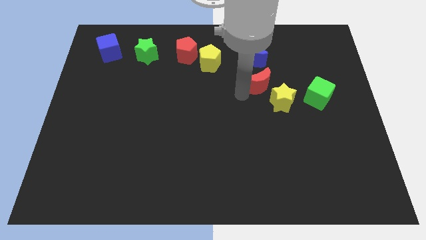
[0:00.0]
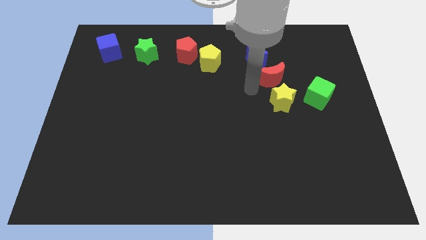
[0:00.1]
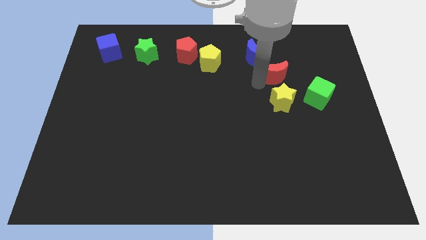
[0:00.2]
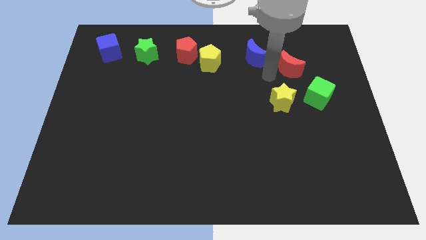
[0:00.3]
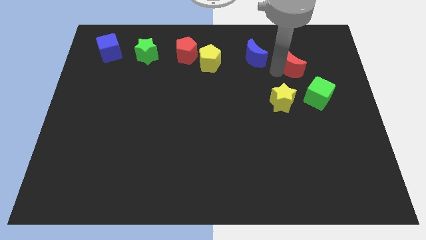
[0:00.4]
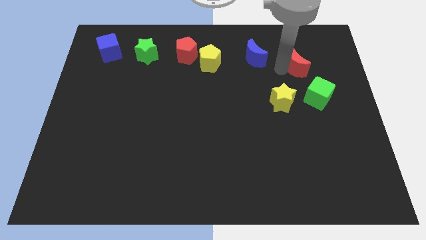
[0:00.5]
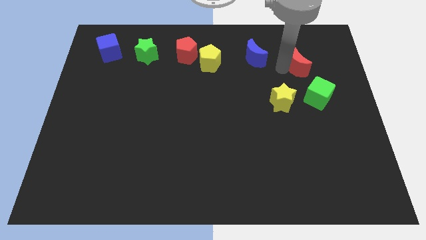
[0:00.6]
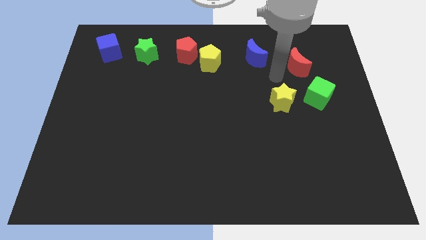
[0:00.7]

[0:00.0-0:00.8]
move the red moon right to the blue moon

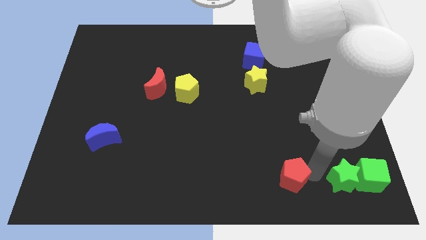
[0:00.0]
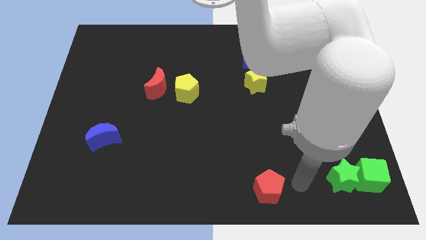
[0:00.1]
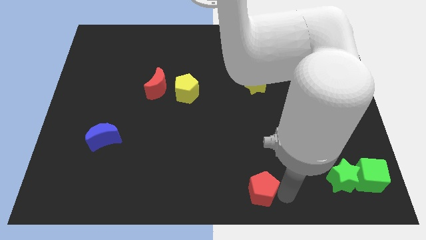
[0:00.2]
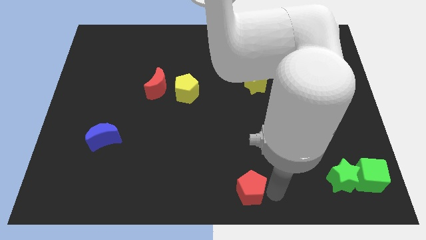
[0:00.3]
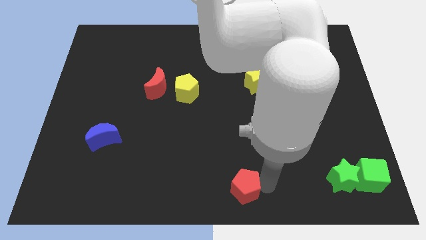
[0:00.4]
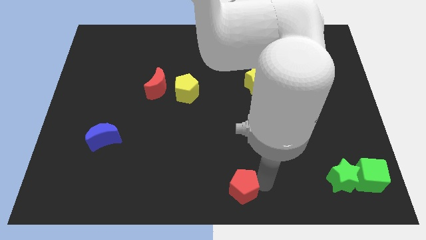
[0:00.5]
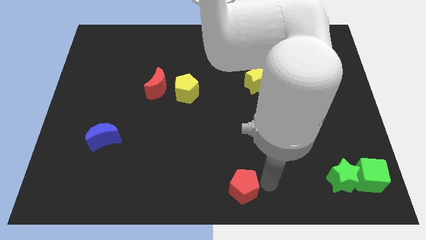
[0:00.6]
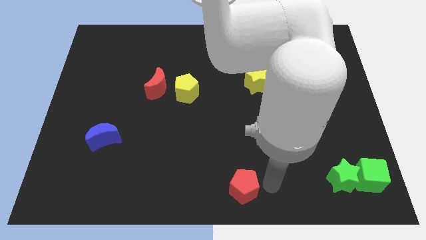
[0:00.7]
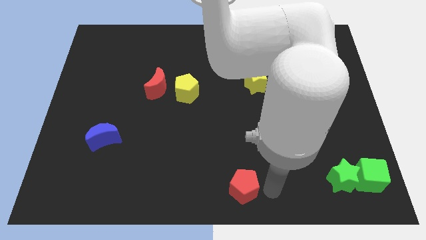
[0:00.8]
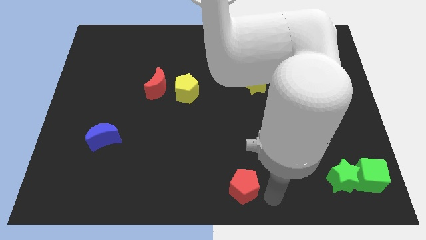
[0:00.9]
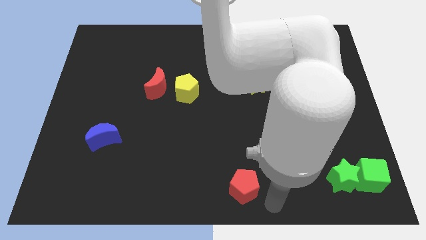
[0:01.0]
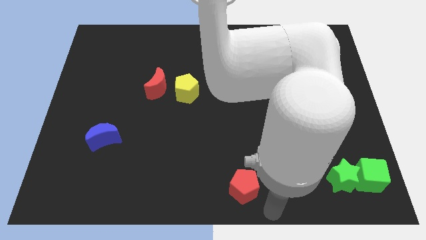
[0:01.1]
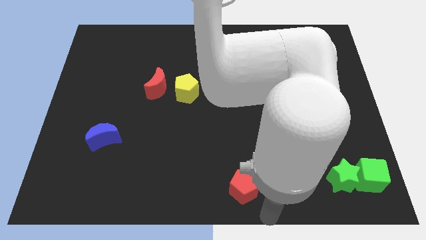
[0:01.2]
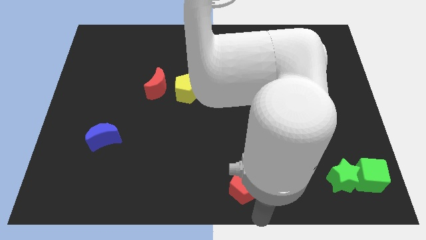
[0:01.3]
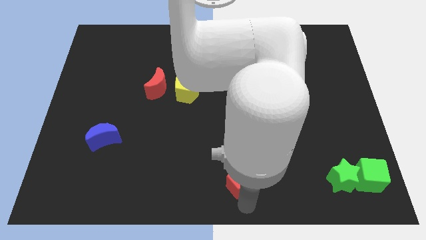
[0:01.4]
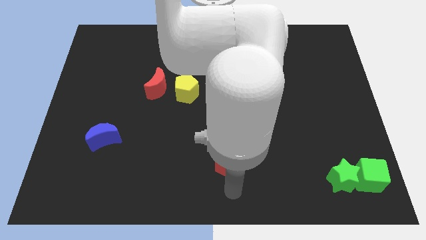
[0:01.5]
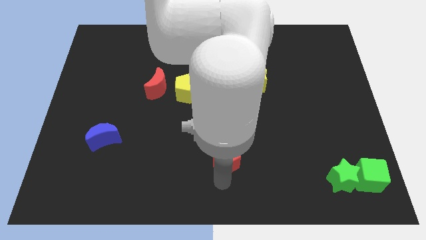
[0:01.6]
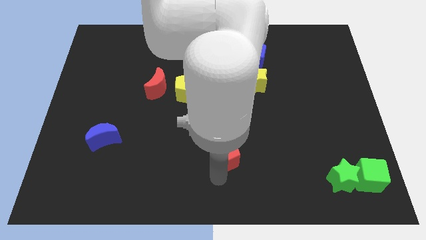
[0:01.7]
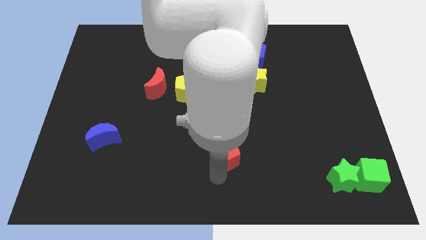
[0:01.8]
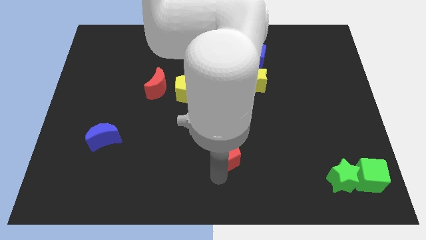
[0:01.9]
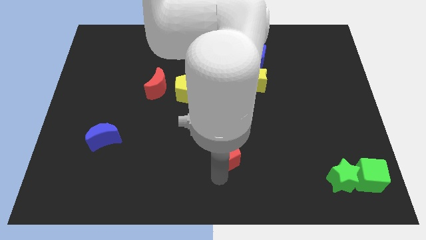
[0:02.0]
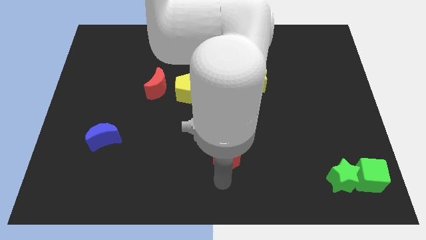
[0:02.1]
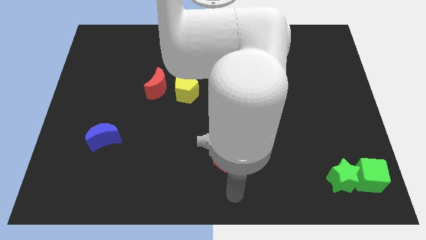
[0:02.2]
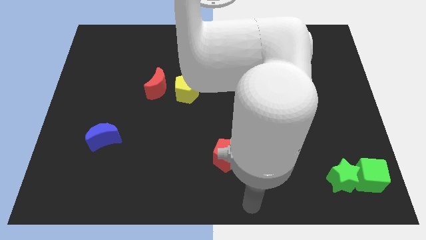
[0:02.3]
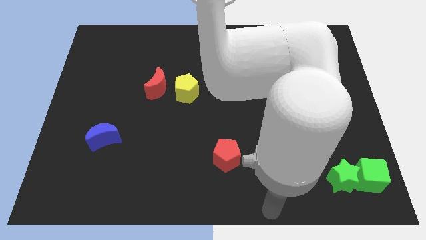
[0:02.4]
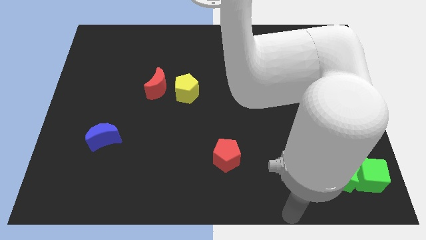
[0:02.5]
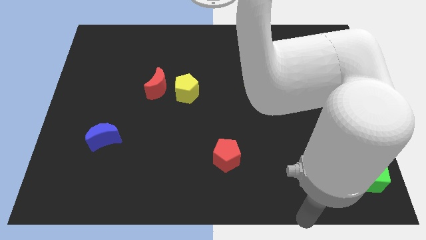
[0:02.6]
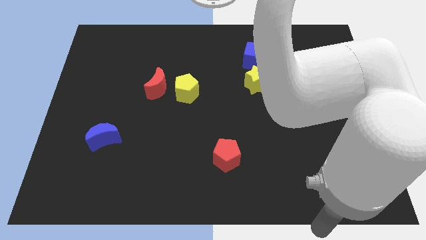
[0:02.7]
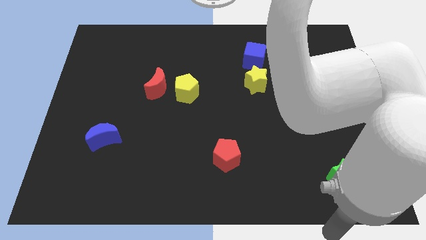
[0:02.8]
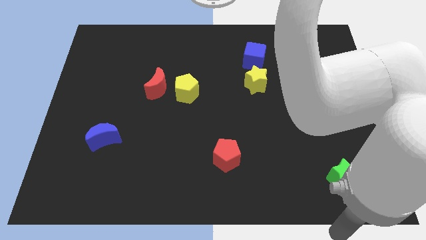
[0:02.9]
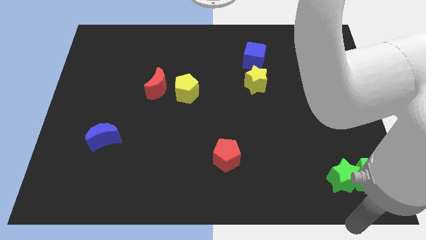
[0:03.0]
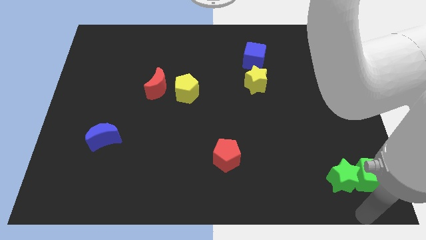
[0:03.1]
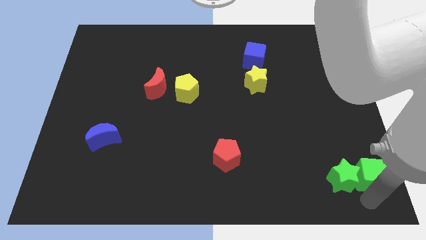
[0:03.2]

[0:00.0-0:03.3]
move the red pentagon diagonal to the yellow pentagon and go away

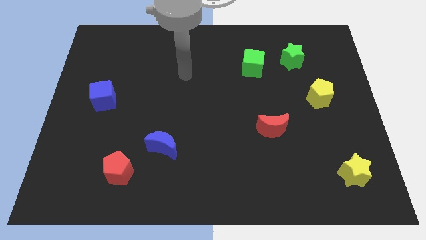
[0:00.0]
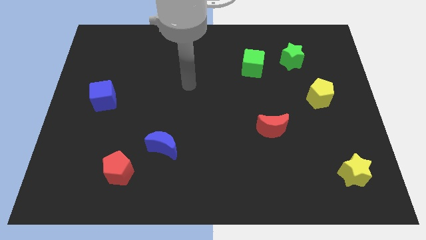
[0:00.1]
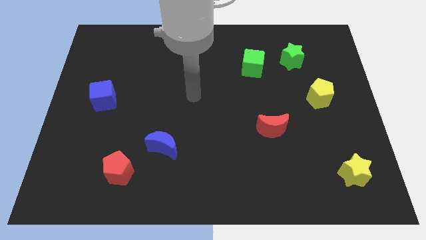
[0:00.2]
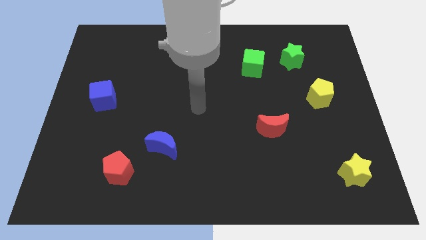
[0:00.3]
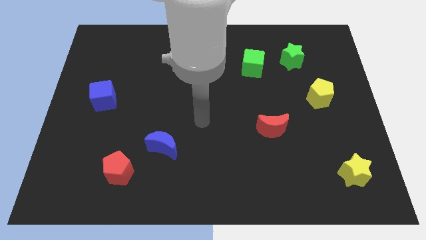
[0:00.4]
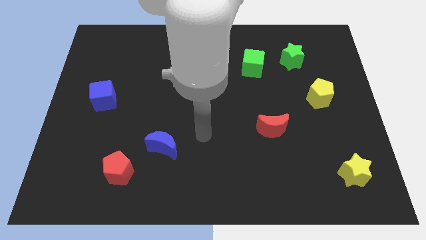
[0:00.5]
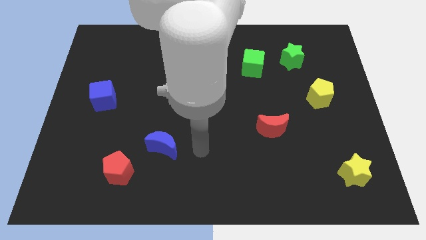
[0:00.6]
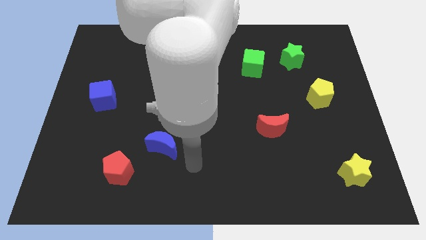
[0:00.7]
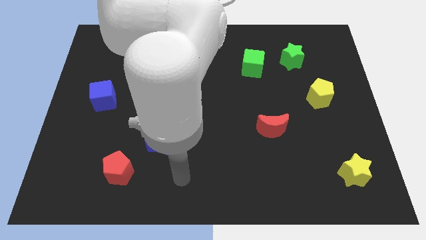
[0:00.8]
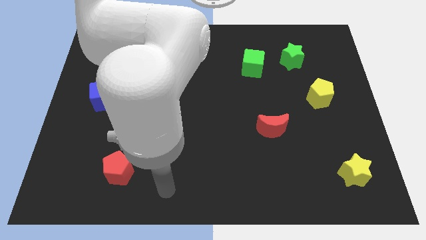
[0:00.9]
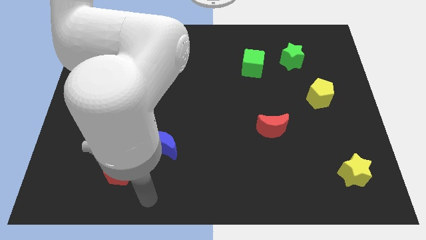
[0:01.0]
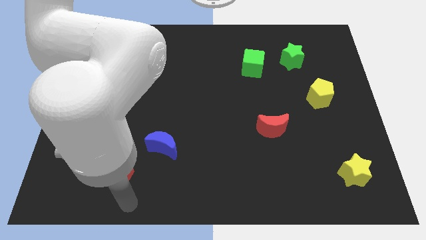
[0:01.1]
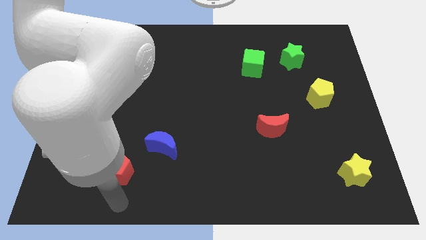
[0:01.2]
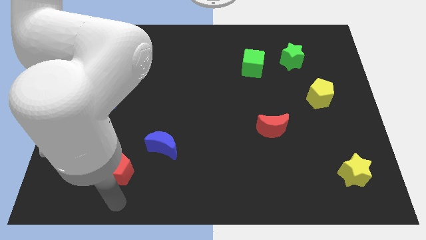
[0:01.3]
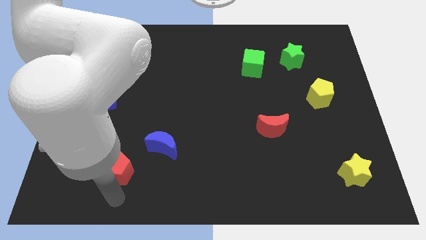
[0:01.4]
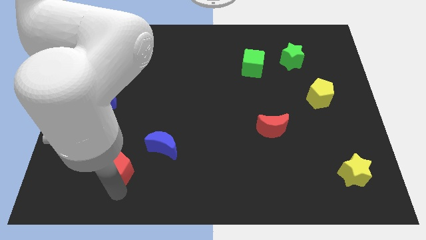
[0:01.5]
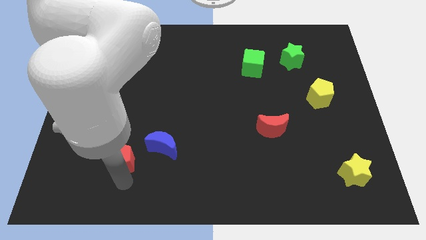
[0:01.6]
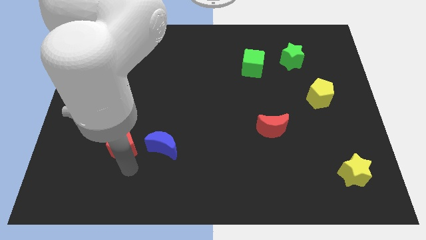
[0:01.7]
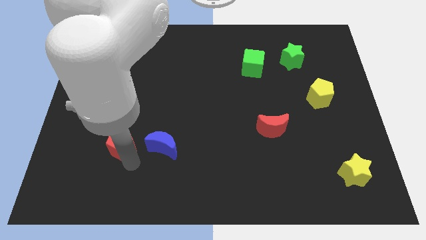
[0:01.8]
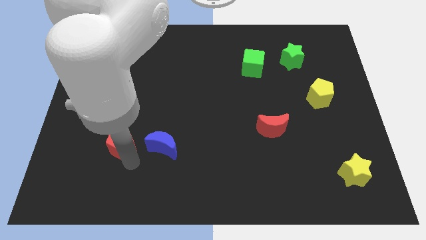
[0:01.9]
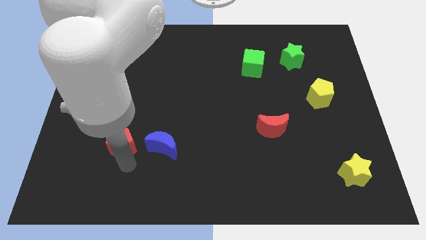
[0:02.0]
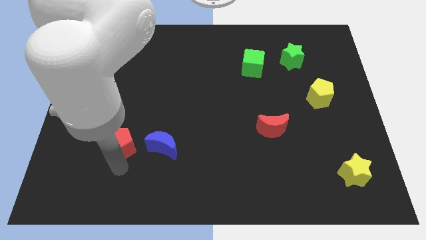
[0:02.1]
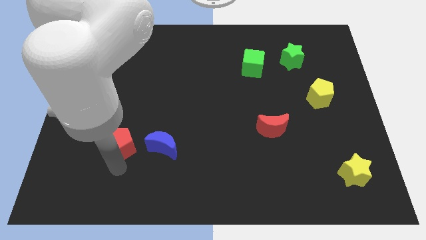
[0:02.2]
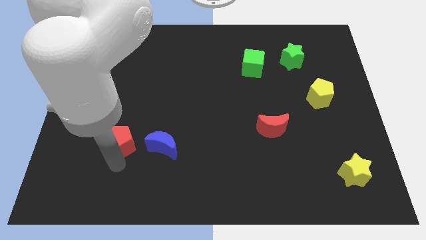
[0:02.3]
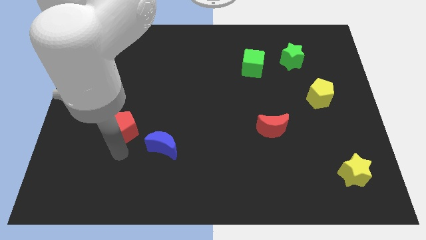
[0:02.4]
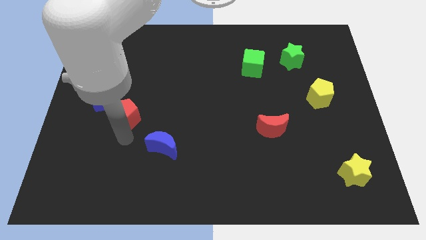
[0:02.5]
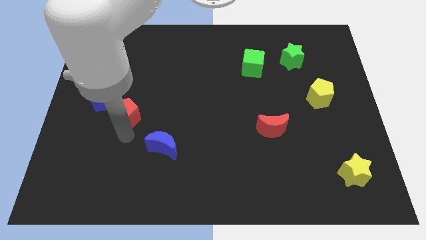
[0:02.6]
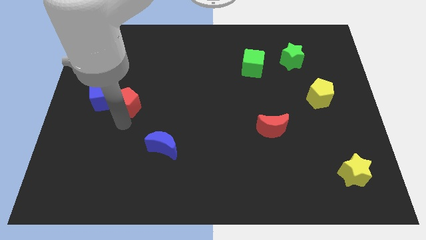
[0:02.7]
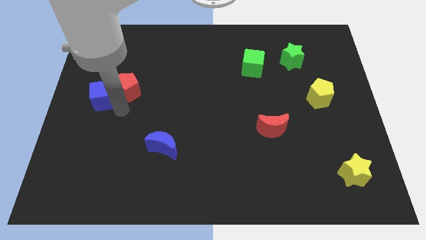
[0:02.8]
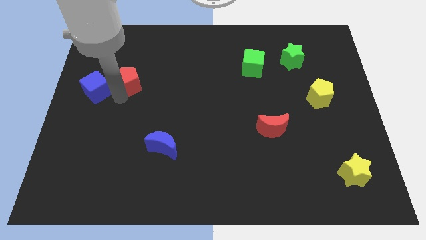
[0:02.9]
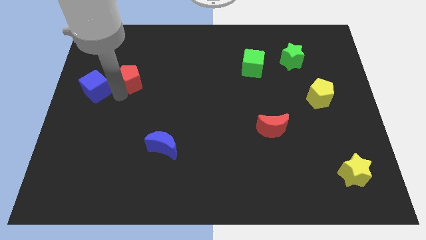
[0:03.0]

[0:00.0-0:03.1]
move the red pentagon towards the top

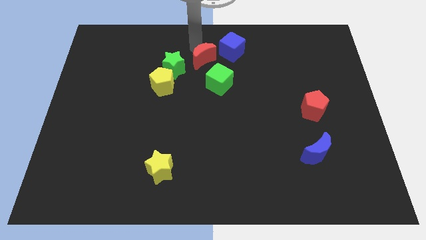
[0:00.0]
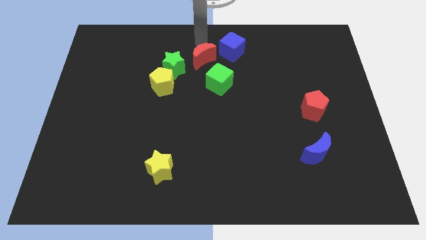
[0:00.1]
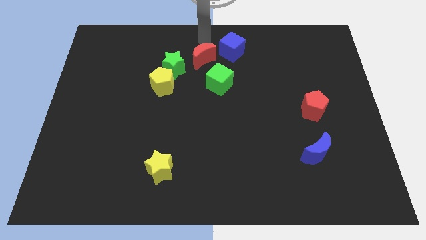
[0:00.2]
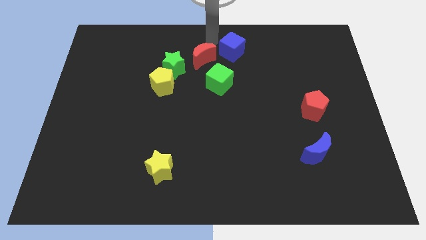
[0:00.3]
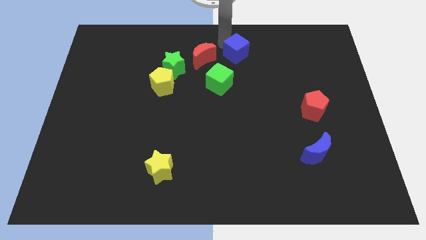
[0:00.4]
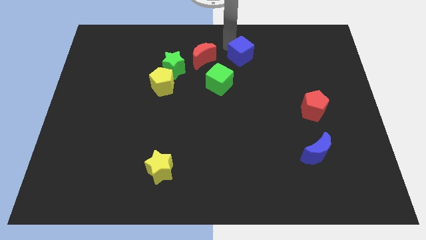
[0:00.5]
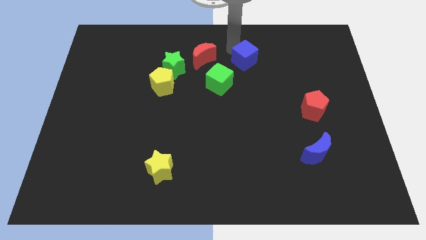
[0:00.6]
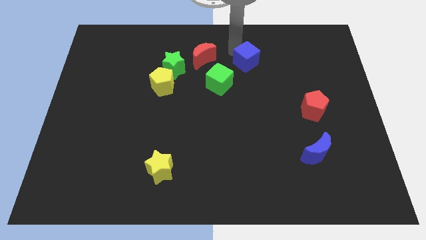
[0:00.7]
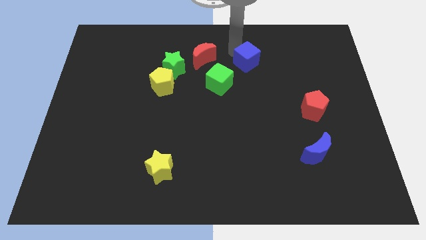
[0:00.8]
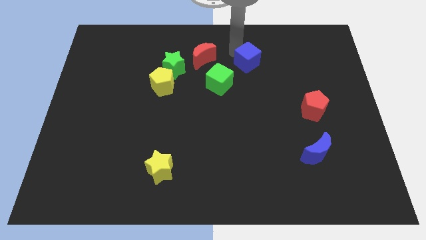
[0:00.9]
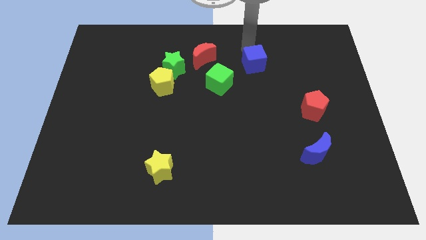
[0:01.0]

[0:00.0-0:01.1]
slide the blue cube to the right side of the red crescent

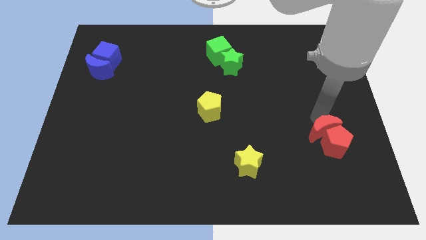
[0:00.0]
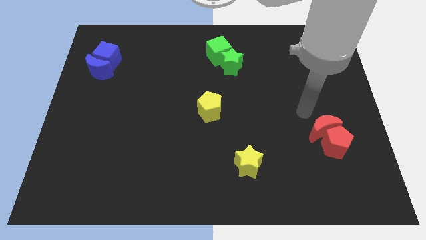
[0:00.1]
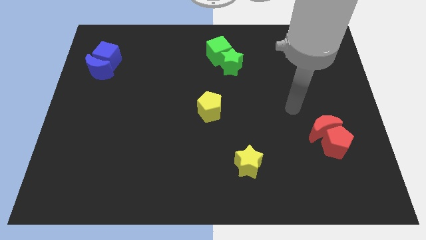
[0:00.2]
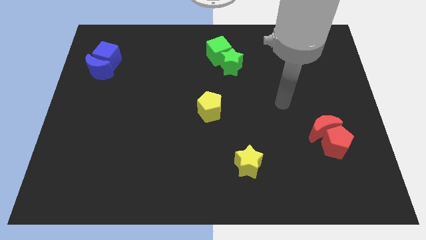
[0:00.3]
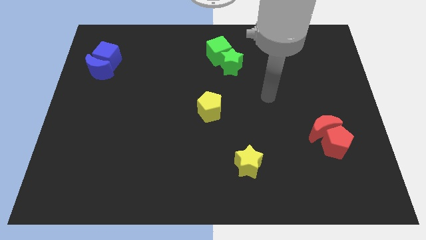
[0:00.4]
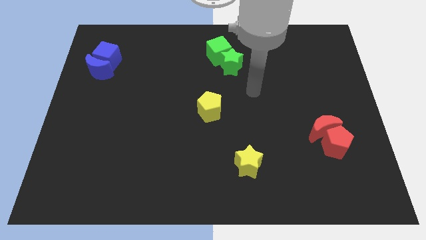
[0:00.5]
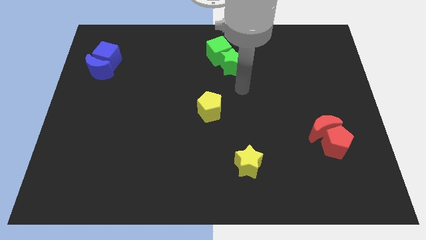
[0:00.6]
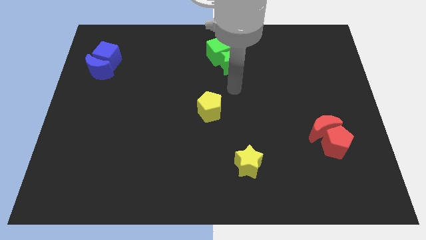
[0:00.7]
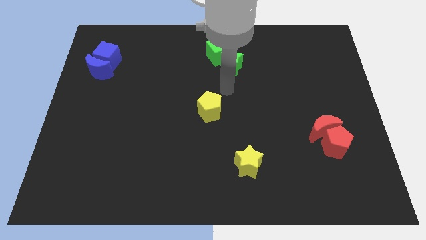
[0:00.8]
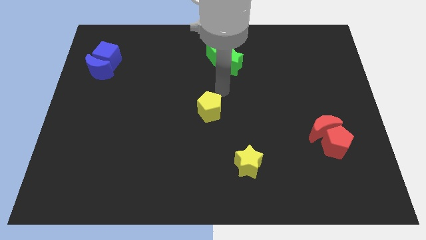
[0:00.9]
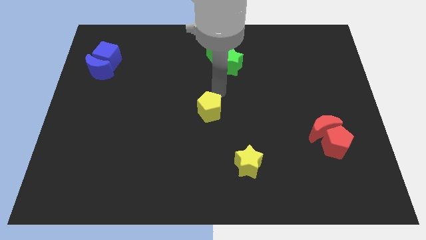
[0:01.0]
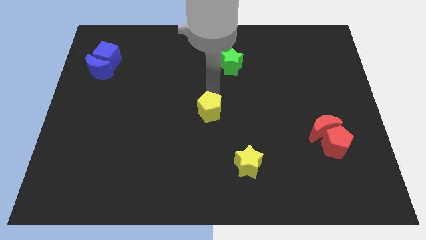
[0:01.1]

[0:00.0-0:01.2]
put your arm above the yellow pentagon
